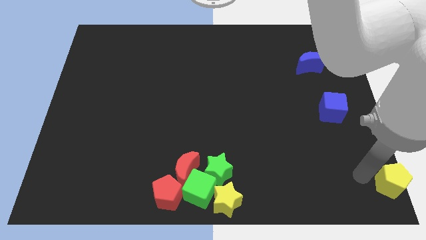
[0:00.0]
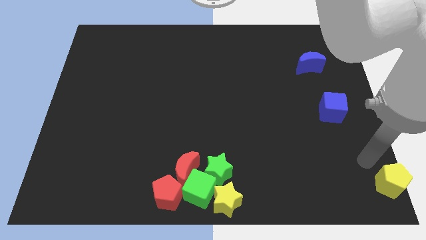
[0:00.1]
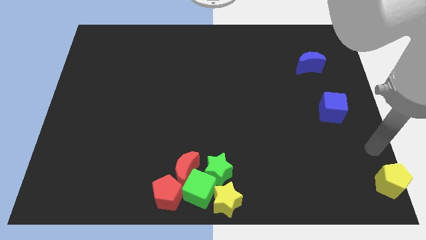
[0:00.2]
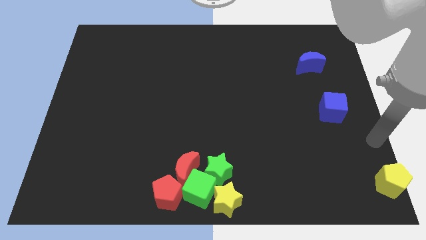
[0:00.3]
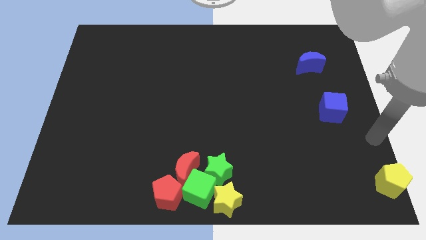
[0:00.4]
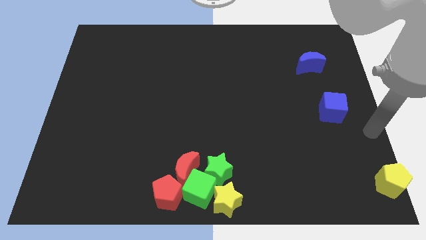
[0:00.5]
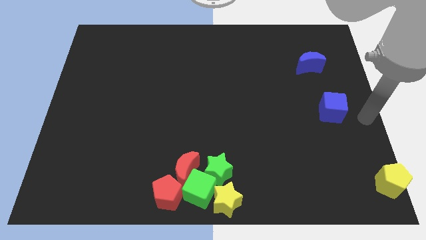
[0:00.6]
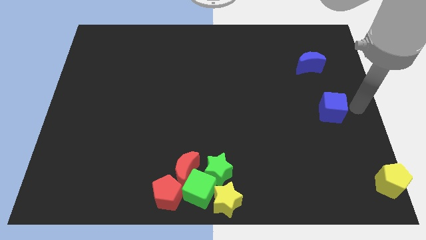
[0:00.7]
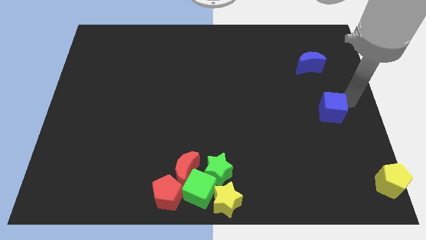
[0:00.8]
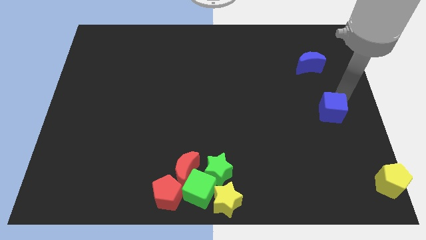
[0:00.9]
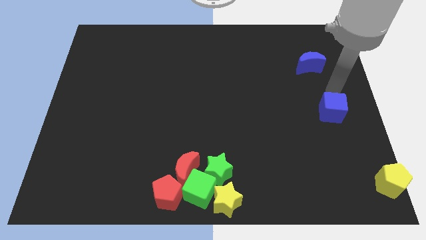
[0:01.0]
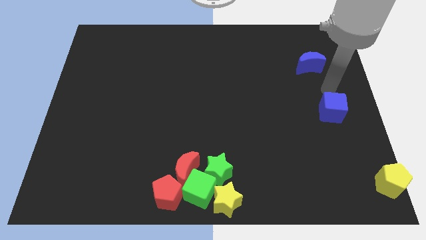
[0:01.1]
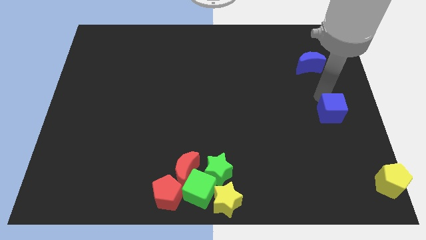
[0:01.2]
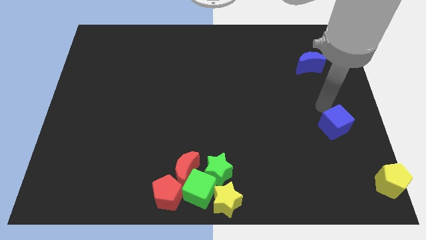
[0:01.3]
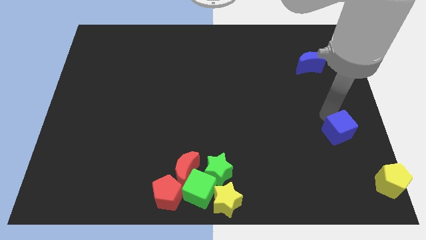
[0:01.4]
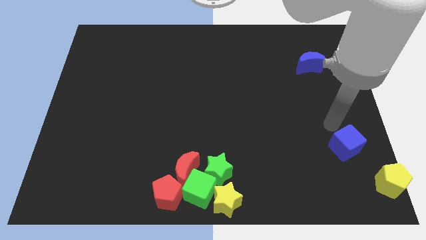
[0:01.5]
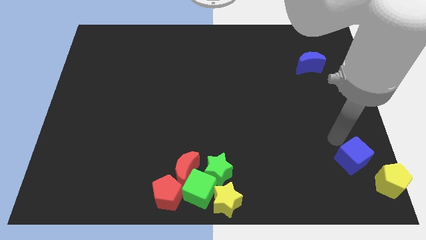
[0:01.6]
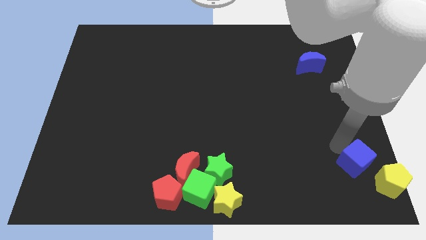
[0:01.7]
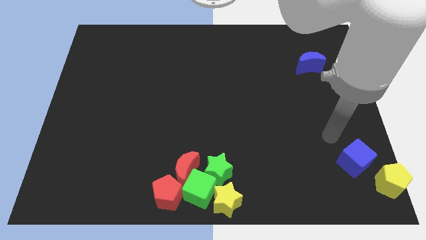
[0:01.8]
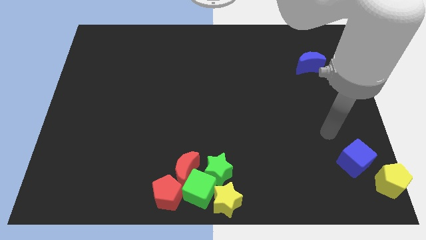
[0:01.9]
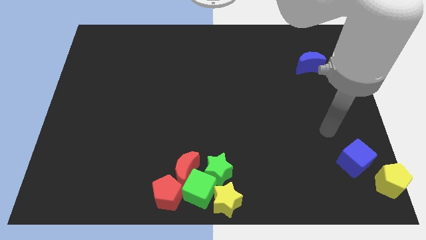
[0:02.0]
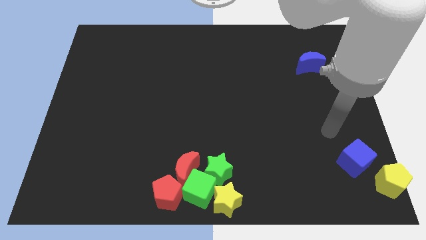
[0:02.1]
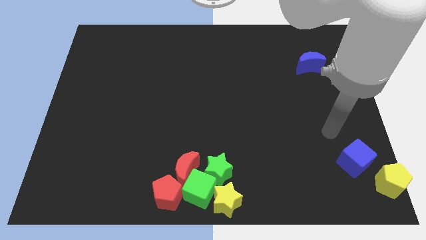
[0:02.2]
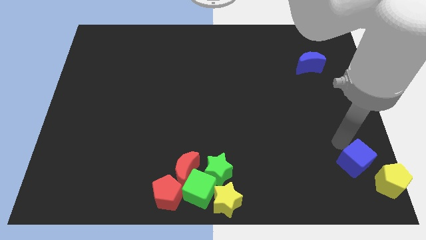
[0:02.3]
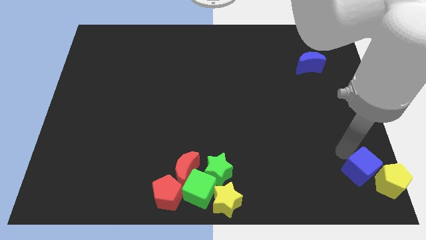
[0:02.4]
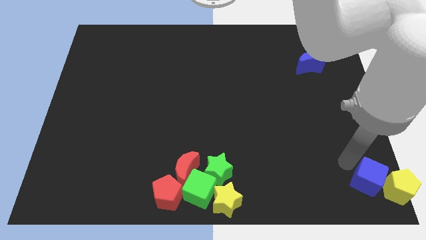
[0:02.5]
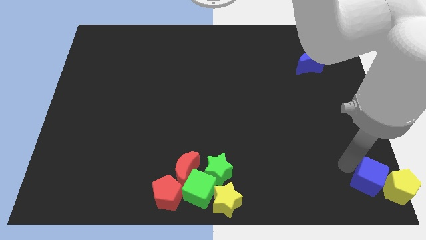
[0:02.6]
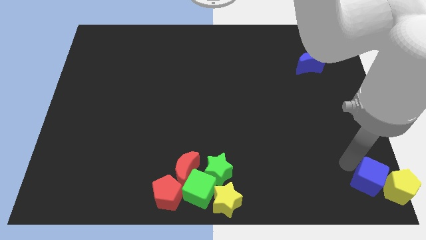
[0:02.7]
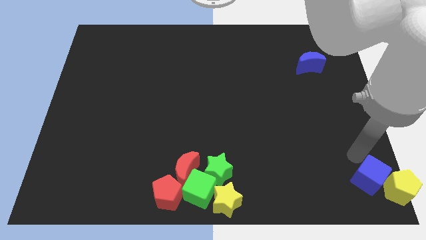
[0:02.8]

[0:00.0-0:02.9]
push the blue cube into the yellow pentagon from the left

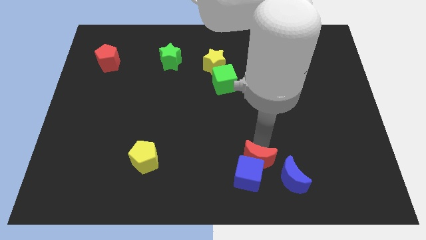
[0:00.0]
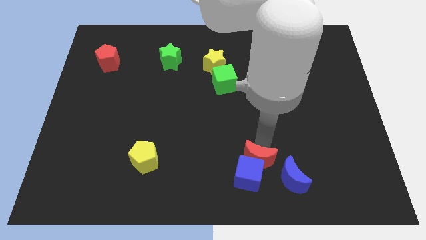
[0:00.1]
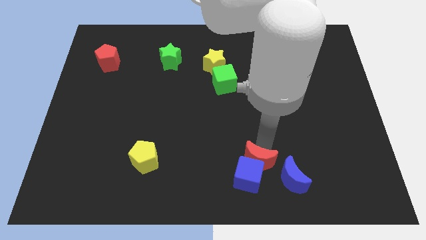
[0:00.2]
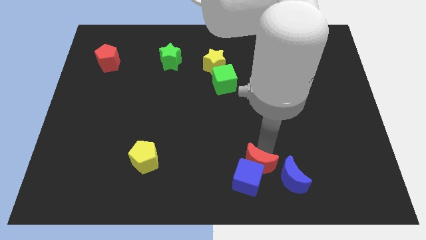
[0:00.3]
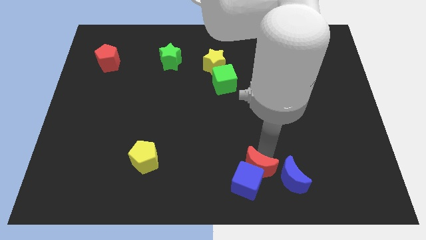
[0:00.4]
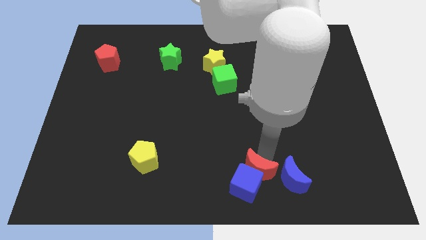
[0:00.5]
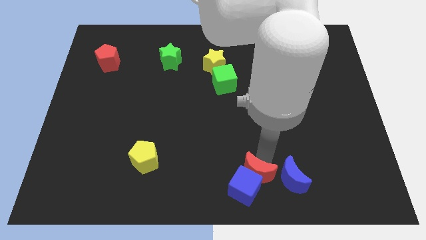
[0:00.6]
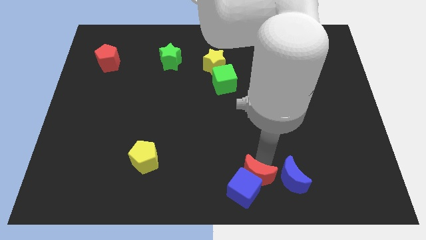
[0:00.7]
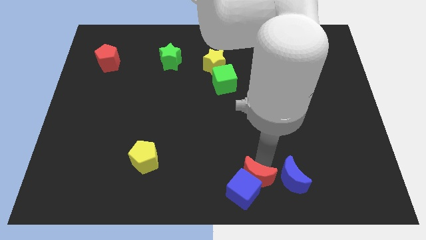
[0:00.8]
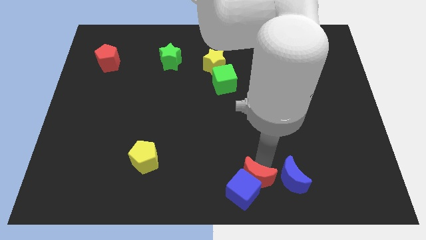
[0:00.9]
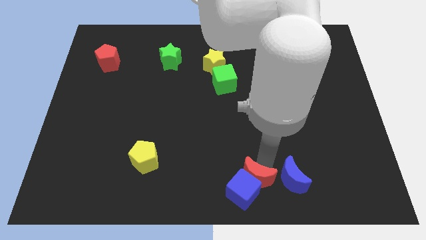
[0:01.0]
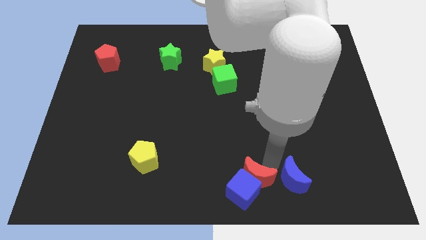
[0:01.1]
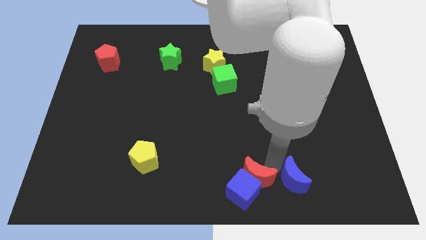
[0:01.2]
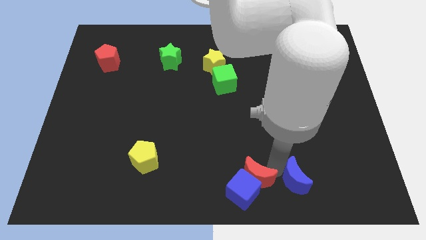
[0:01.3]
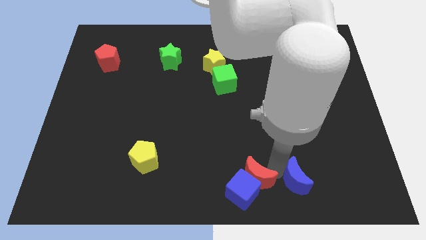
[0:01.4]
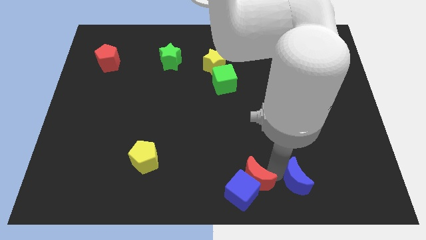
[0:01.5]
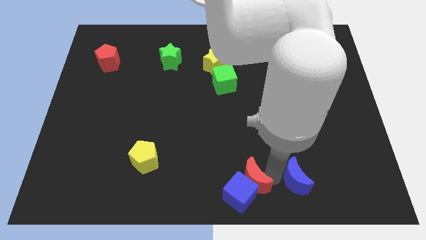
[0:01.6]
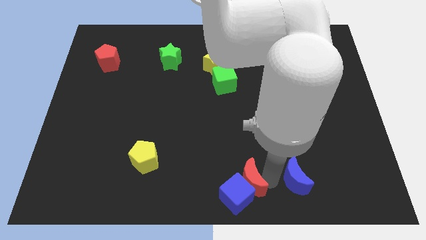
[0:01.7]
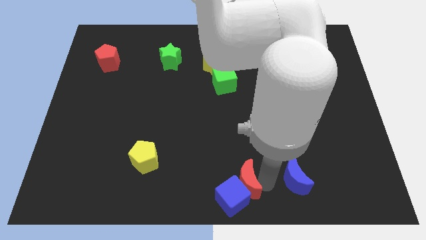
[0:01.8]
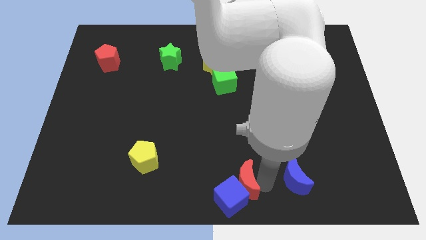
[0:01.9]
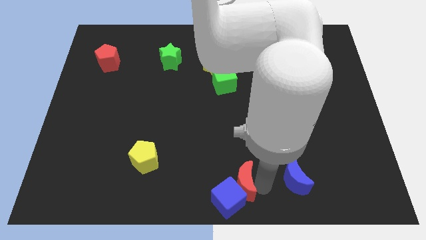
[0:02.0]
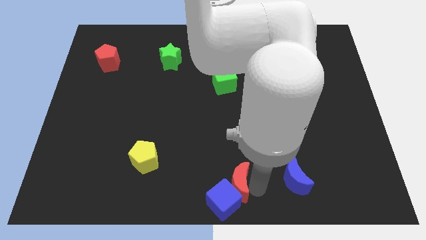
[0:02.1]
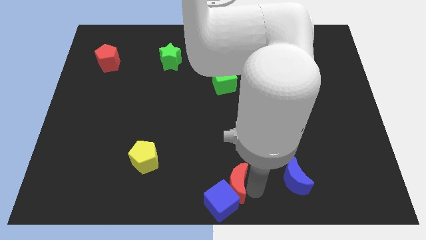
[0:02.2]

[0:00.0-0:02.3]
push the red moon and blue cube to the bottom center

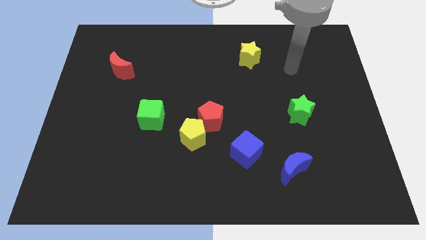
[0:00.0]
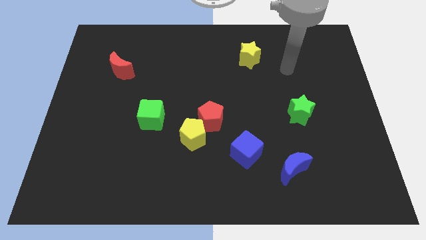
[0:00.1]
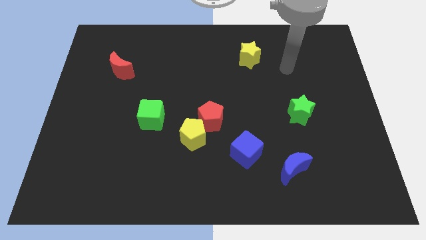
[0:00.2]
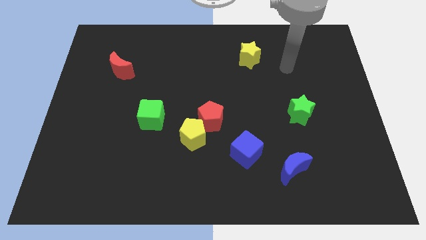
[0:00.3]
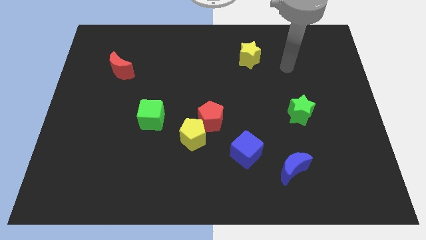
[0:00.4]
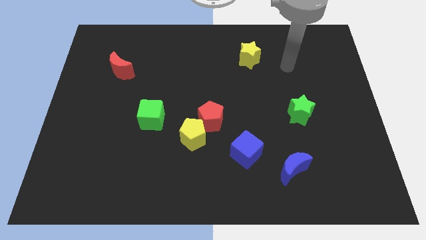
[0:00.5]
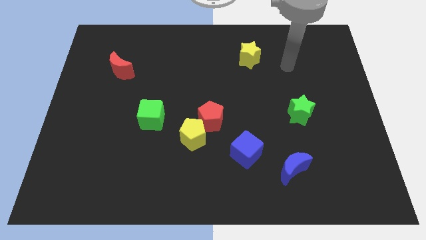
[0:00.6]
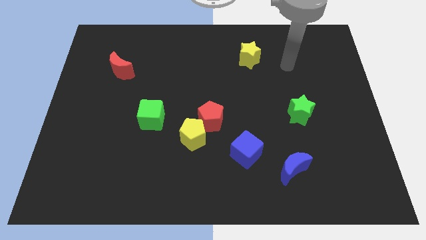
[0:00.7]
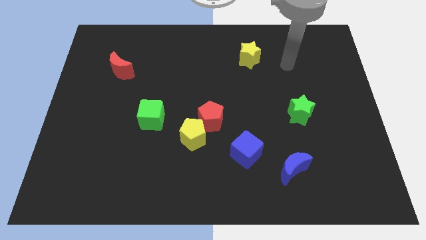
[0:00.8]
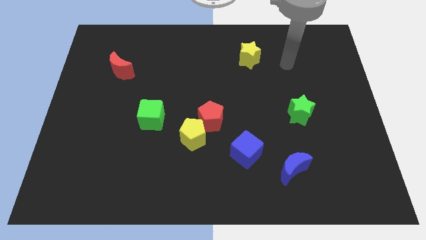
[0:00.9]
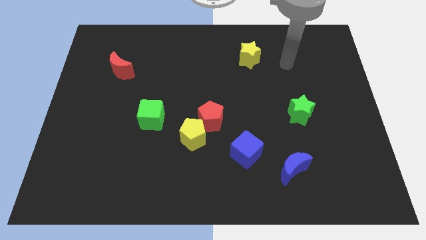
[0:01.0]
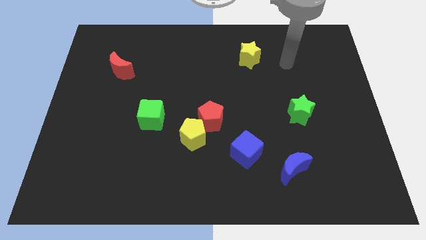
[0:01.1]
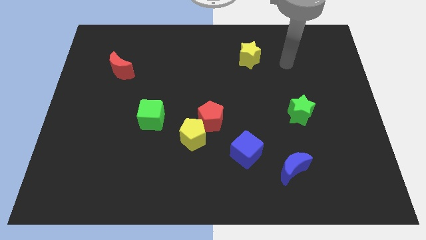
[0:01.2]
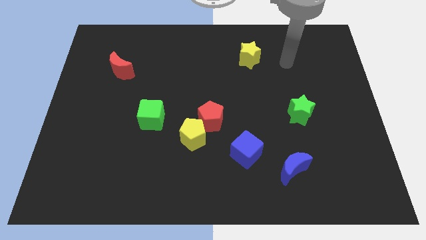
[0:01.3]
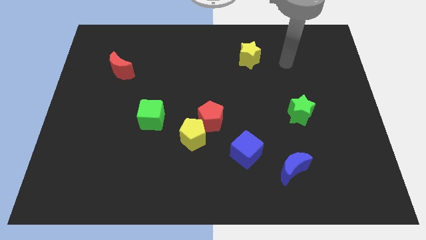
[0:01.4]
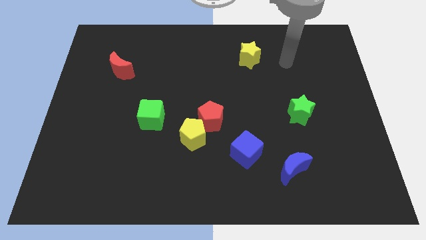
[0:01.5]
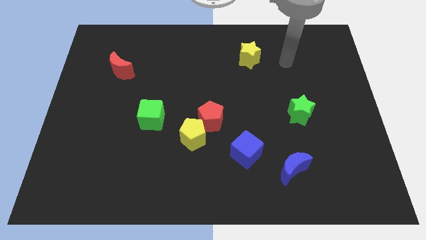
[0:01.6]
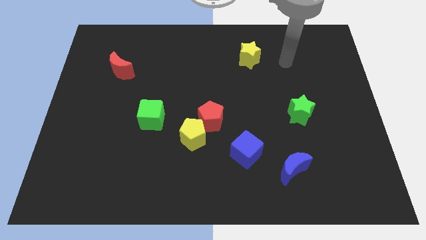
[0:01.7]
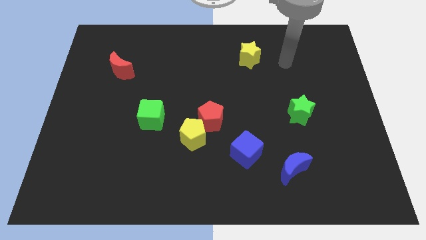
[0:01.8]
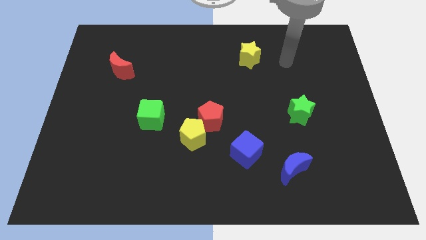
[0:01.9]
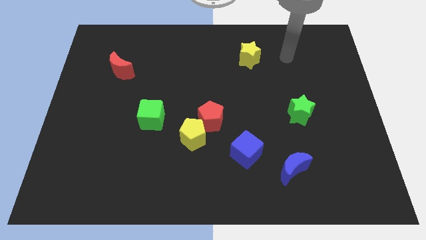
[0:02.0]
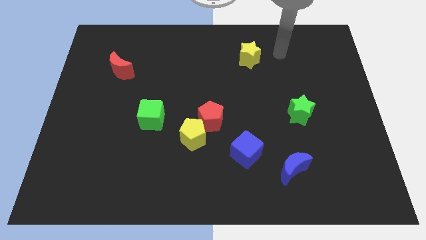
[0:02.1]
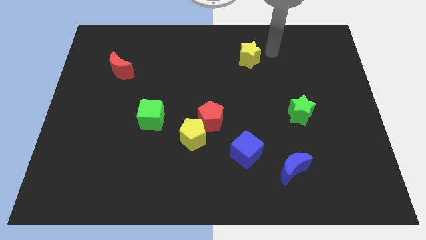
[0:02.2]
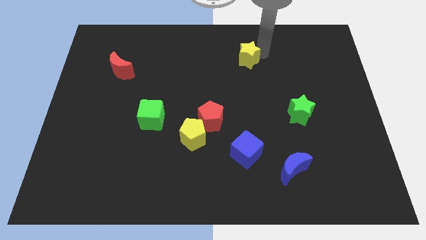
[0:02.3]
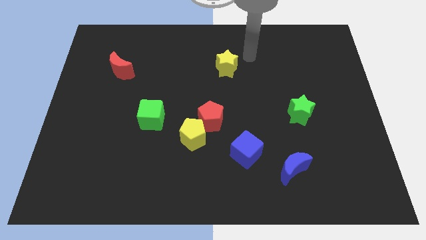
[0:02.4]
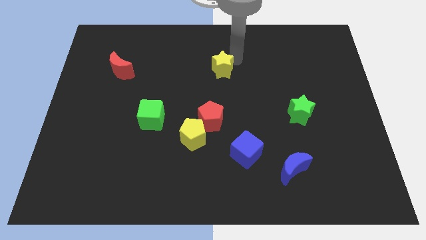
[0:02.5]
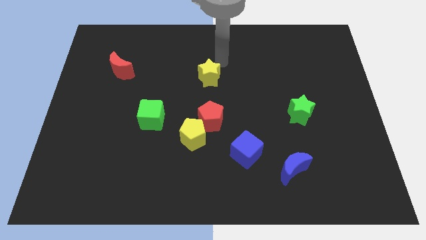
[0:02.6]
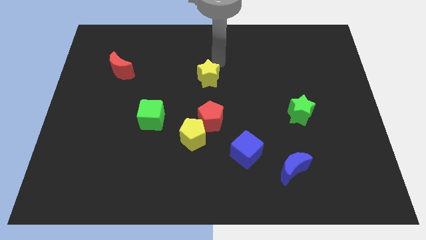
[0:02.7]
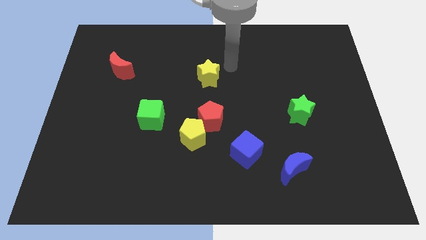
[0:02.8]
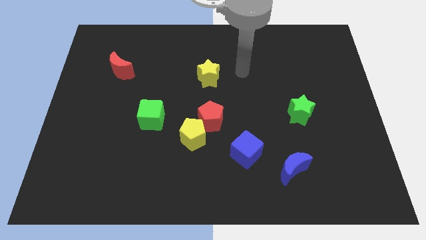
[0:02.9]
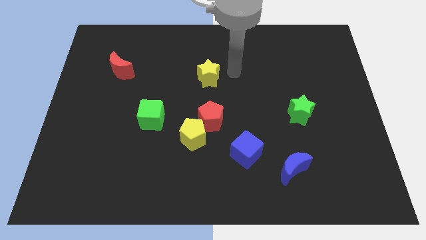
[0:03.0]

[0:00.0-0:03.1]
put the yellow star vertically above the red pentagon

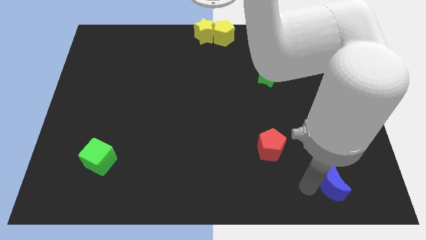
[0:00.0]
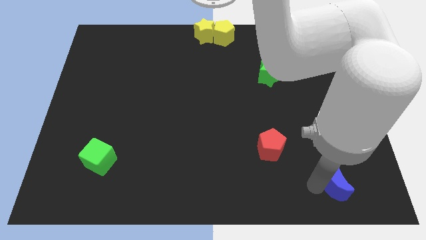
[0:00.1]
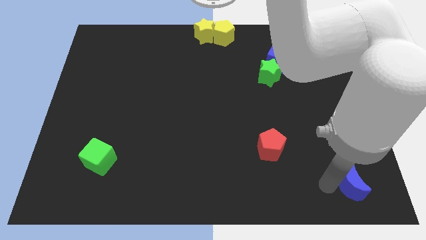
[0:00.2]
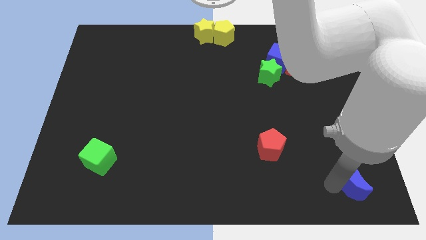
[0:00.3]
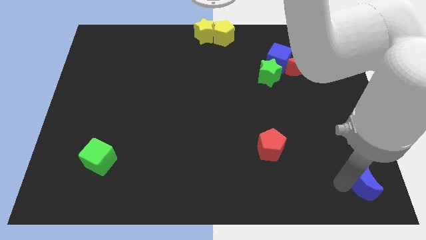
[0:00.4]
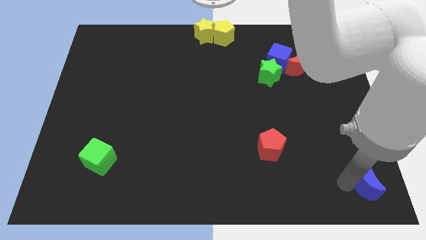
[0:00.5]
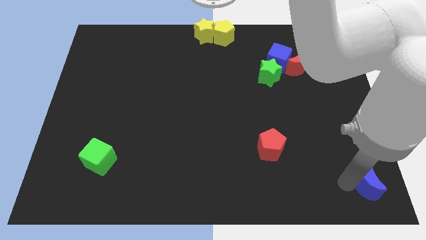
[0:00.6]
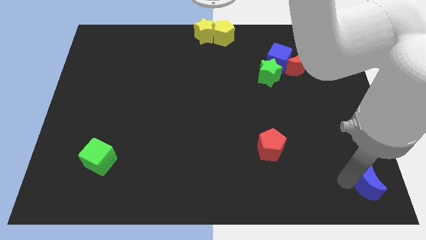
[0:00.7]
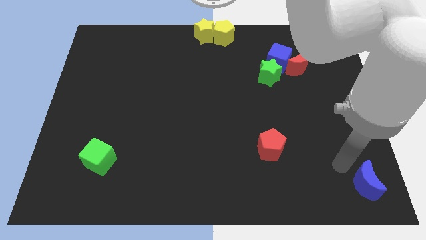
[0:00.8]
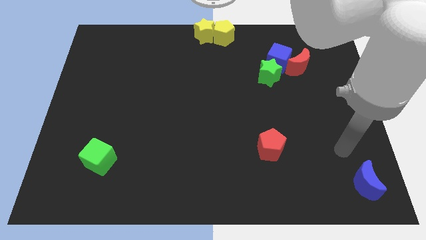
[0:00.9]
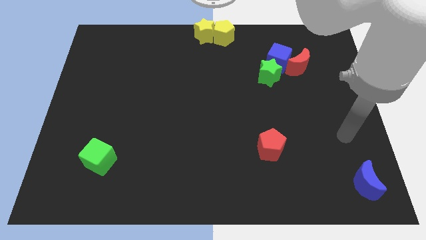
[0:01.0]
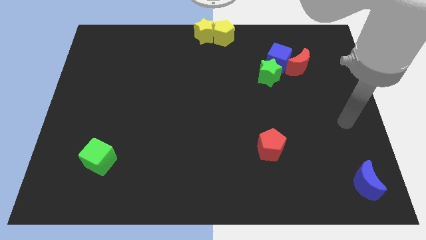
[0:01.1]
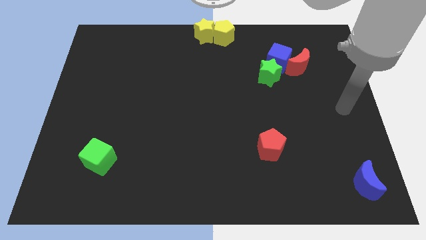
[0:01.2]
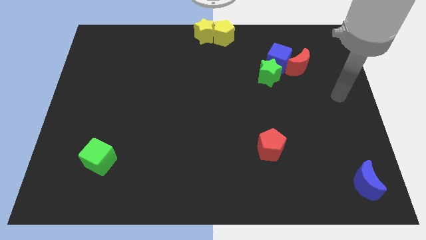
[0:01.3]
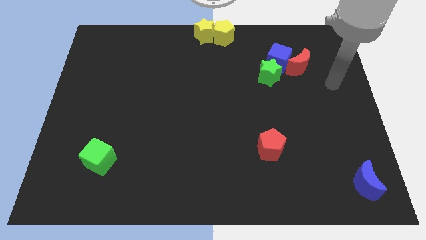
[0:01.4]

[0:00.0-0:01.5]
push the blue crescent vertically below the top right corner
